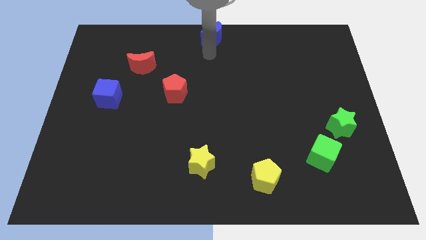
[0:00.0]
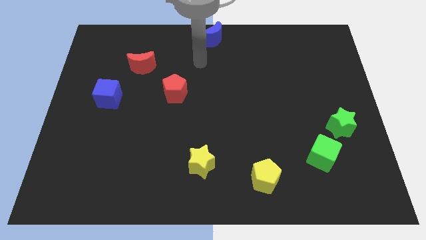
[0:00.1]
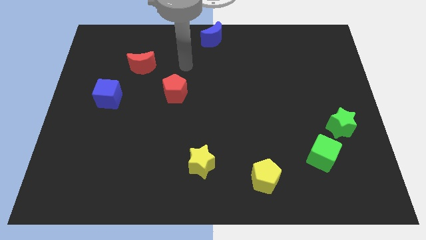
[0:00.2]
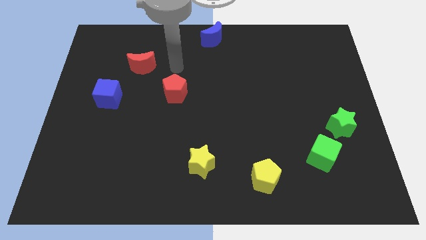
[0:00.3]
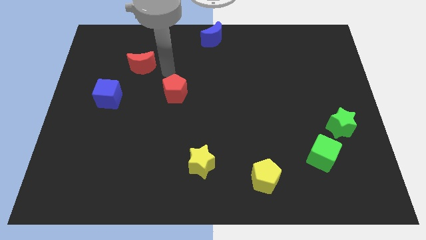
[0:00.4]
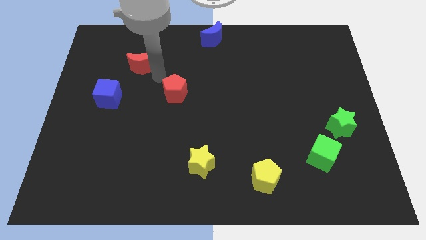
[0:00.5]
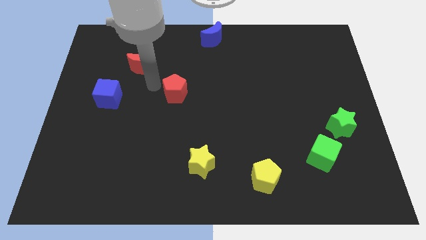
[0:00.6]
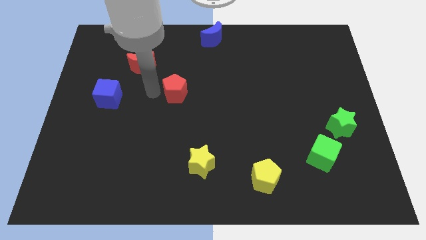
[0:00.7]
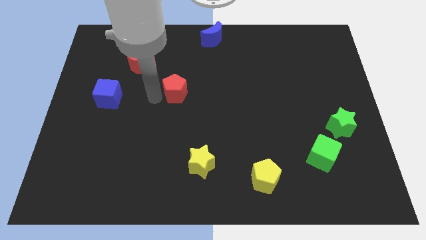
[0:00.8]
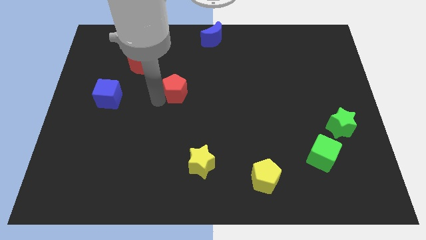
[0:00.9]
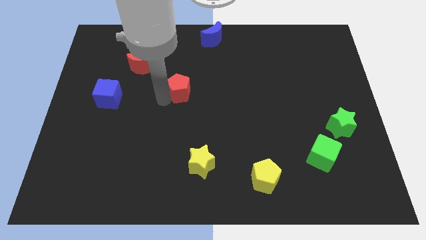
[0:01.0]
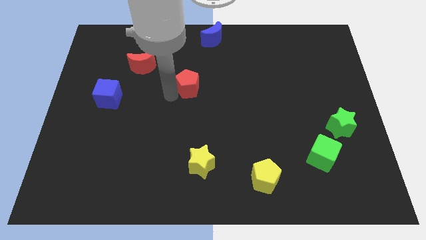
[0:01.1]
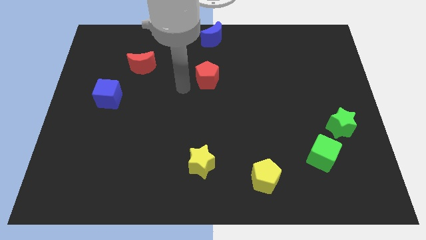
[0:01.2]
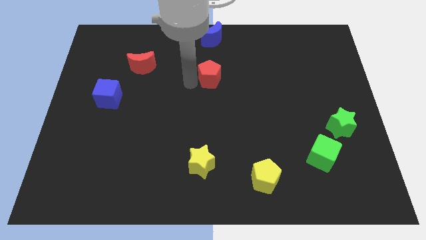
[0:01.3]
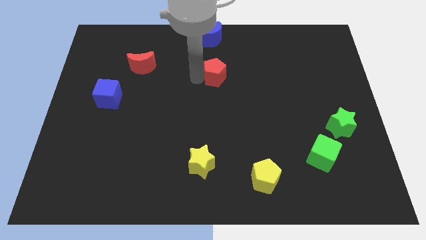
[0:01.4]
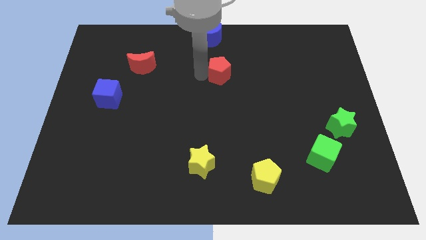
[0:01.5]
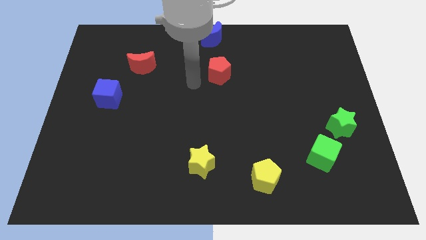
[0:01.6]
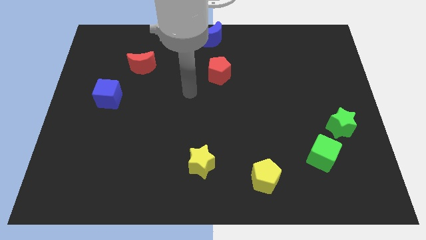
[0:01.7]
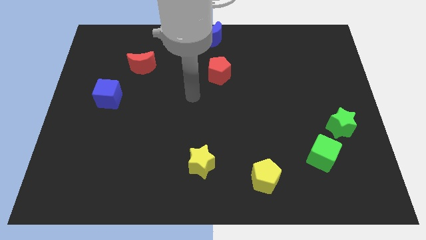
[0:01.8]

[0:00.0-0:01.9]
place the red pentagon below the blue moon

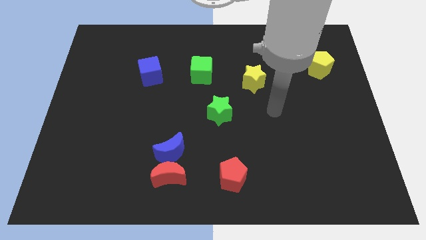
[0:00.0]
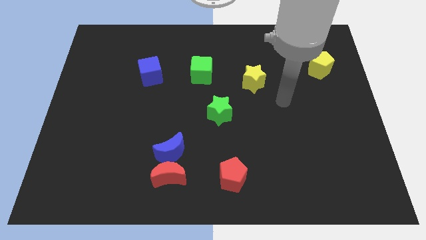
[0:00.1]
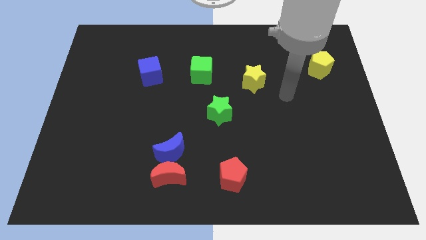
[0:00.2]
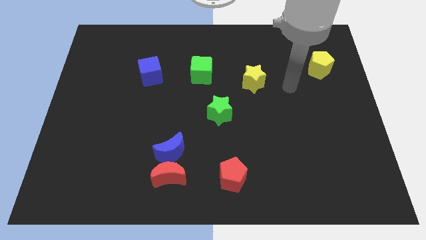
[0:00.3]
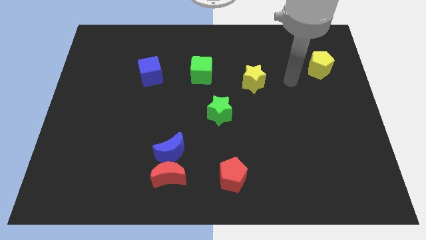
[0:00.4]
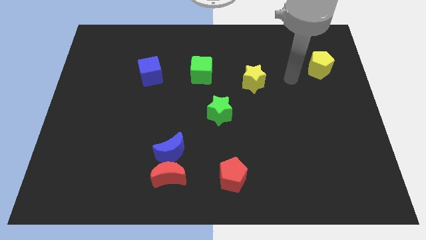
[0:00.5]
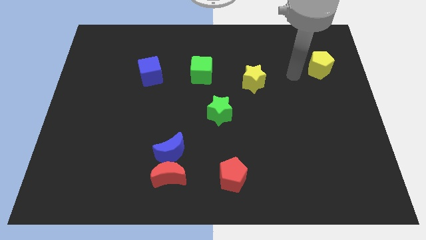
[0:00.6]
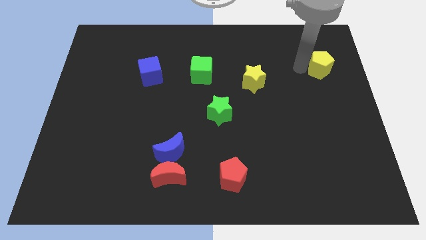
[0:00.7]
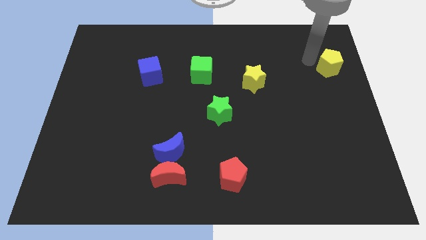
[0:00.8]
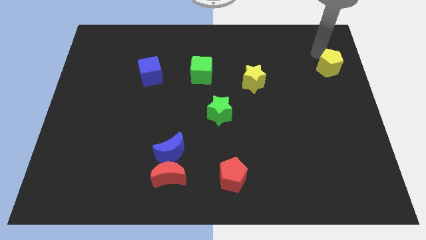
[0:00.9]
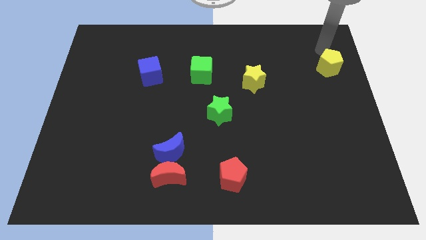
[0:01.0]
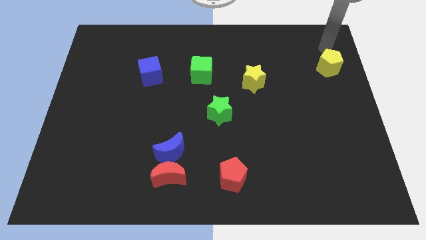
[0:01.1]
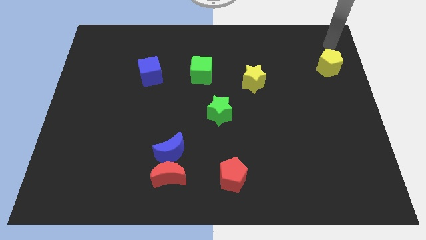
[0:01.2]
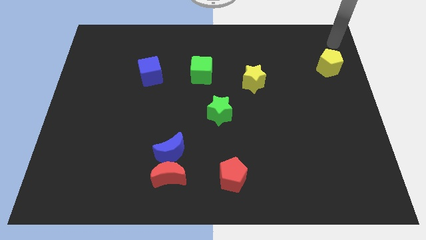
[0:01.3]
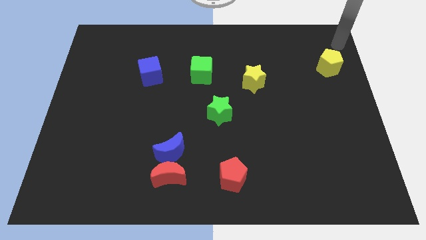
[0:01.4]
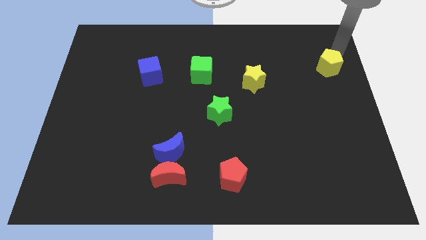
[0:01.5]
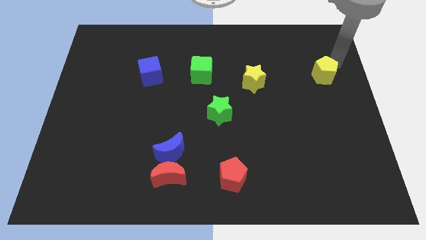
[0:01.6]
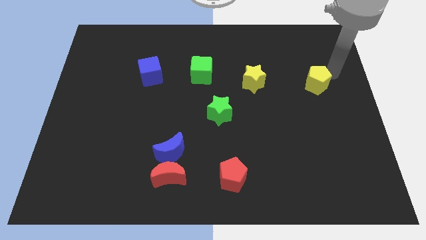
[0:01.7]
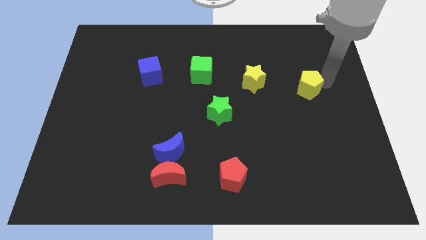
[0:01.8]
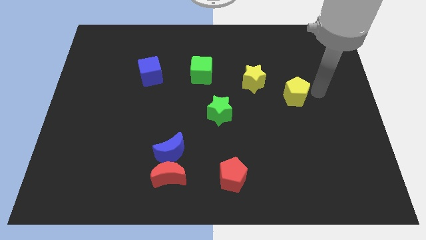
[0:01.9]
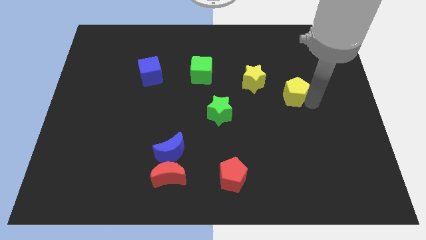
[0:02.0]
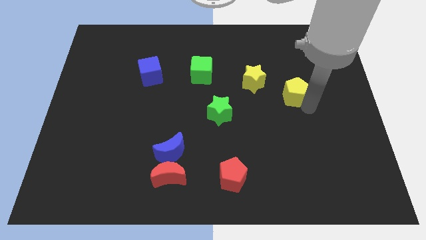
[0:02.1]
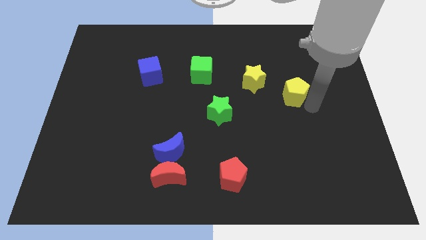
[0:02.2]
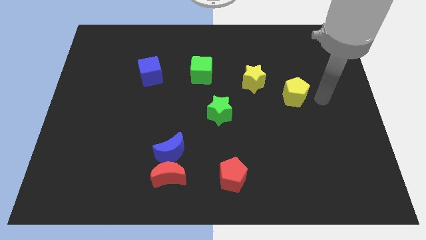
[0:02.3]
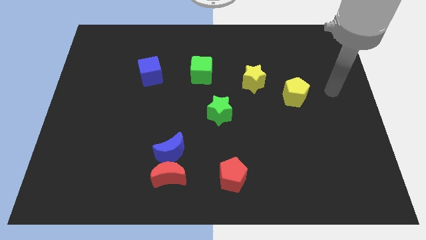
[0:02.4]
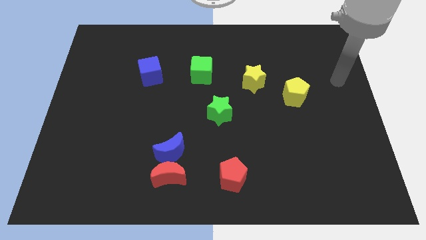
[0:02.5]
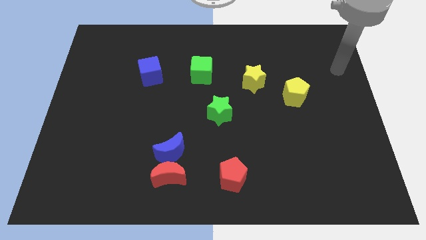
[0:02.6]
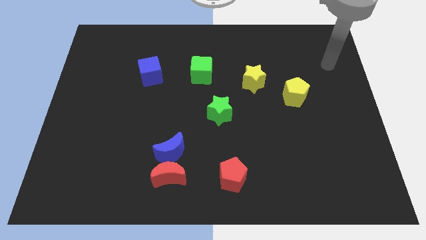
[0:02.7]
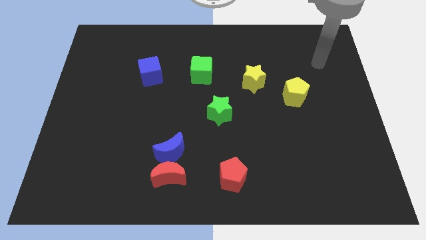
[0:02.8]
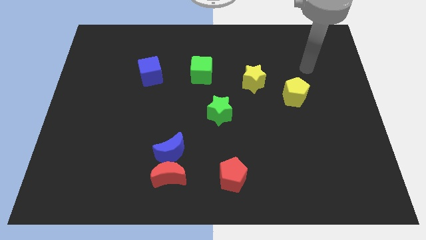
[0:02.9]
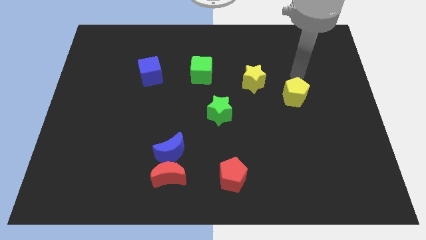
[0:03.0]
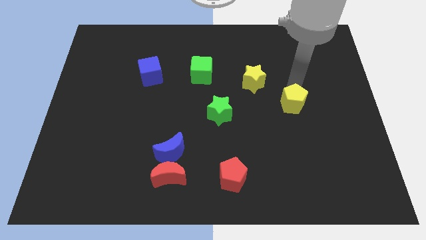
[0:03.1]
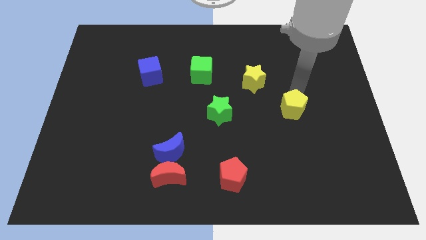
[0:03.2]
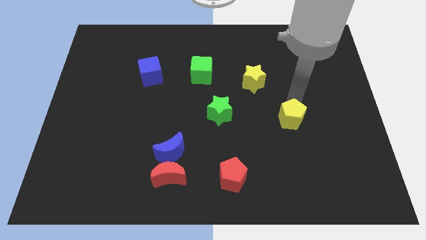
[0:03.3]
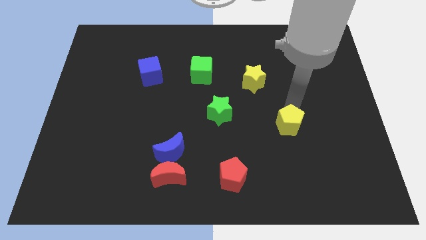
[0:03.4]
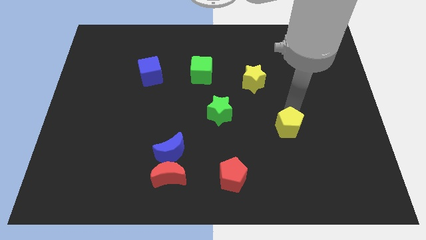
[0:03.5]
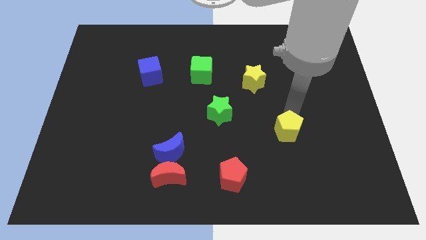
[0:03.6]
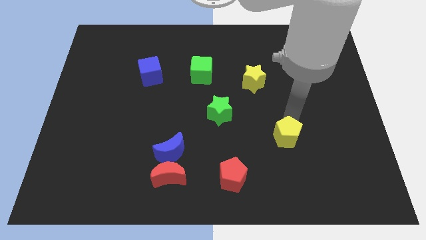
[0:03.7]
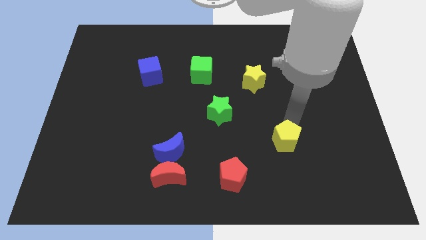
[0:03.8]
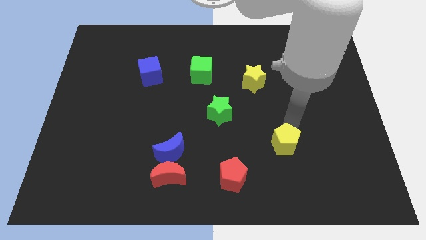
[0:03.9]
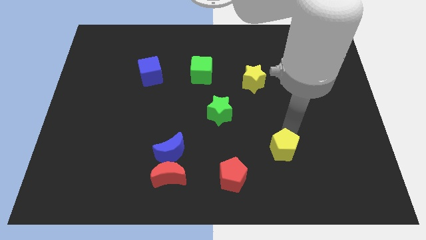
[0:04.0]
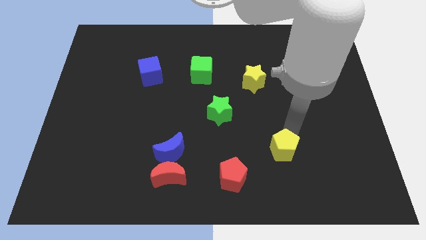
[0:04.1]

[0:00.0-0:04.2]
push yellow pentagon down parallel to blue moon

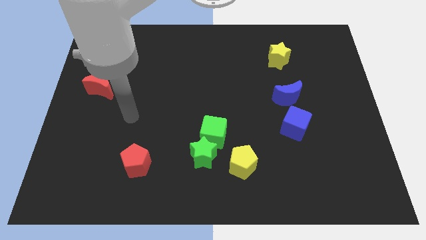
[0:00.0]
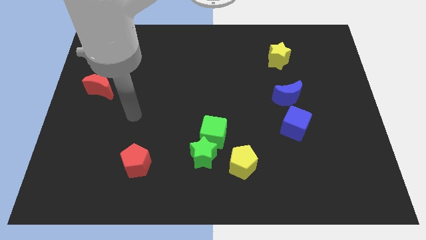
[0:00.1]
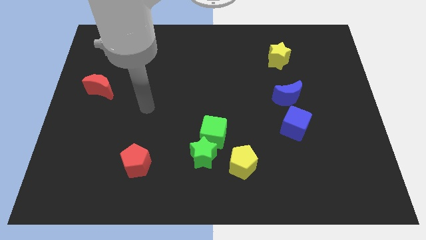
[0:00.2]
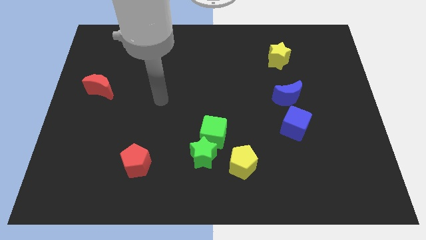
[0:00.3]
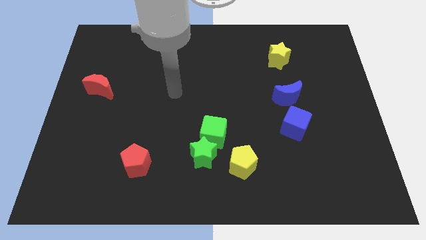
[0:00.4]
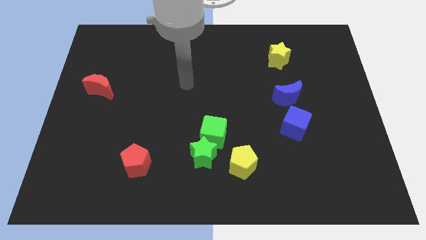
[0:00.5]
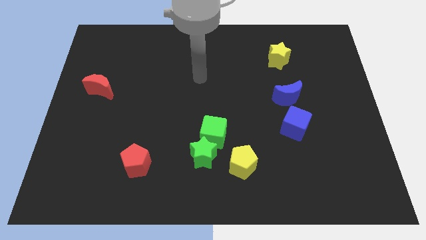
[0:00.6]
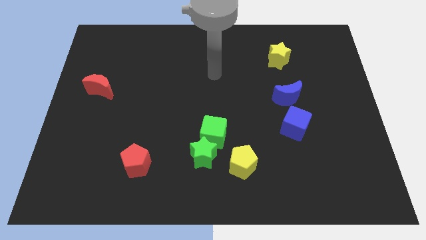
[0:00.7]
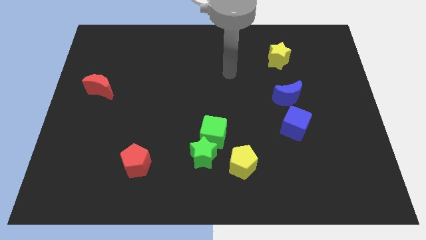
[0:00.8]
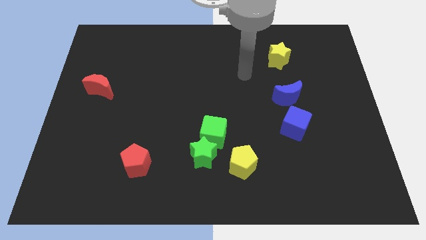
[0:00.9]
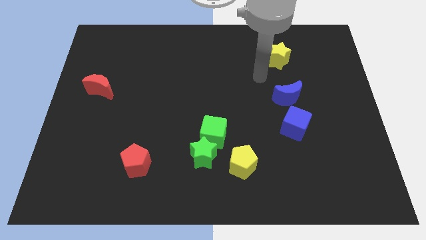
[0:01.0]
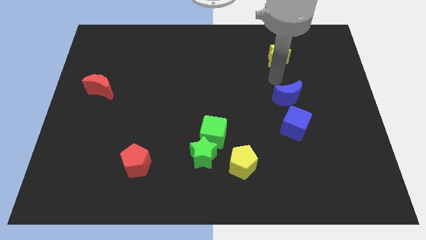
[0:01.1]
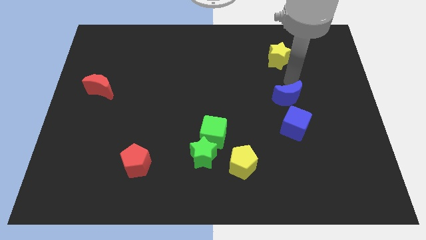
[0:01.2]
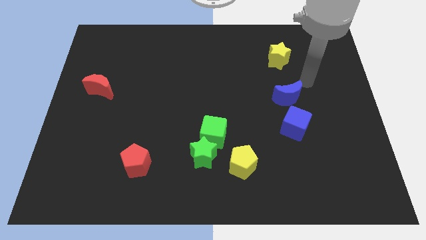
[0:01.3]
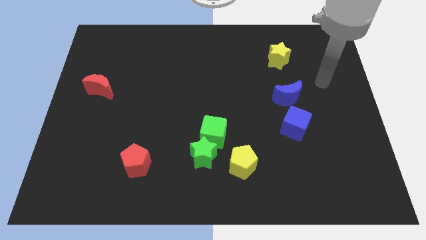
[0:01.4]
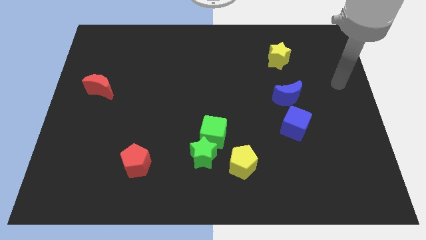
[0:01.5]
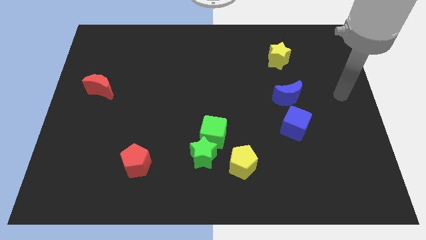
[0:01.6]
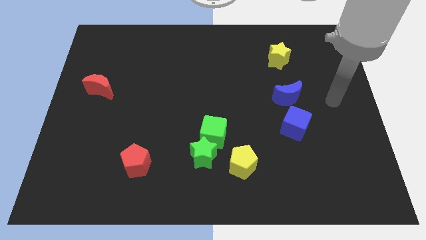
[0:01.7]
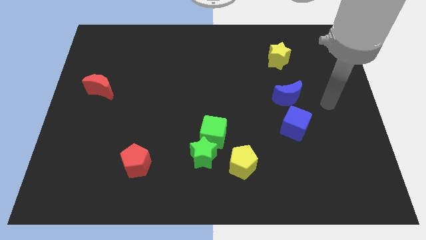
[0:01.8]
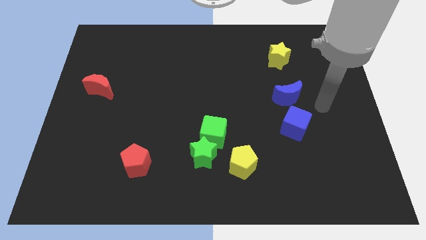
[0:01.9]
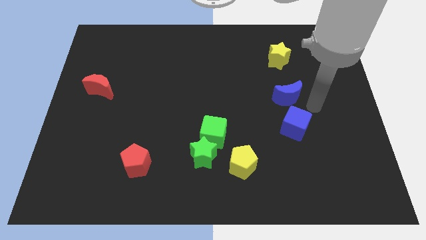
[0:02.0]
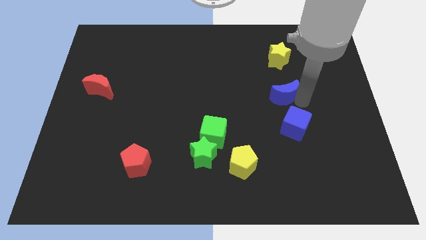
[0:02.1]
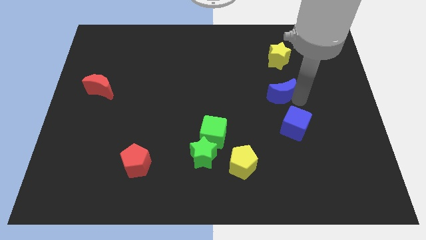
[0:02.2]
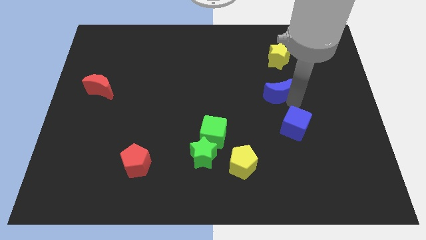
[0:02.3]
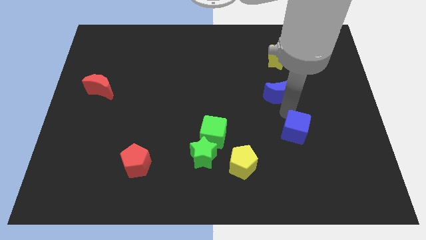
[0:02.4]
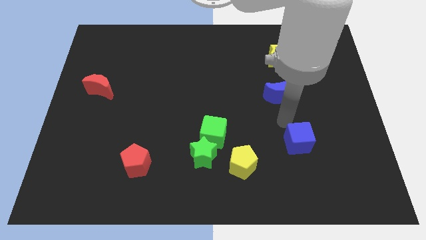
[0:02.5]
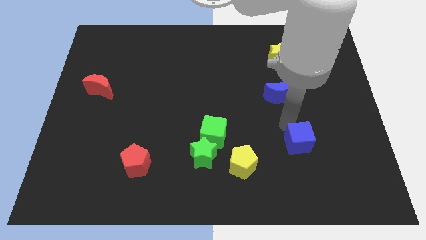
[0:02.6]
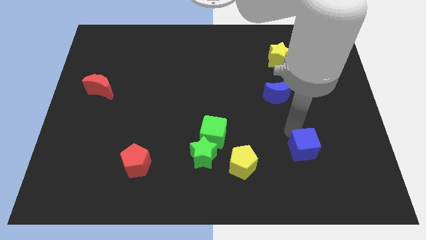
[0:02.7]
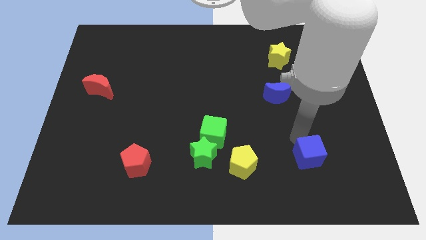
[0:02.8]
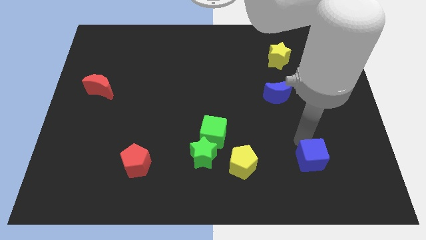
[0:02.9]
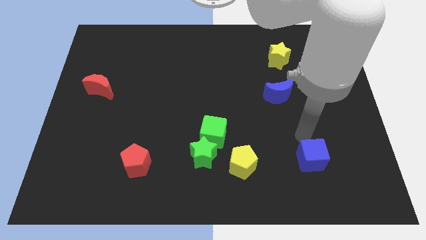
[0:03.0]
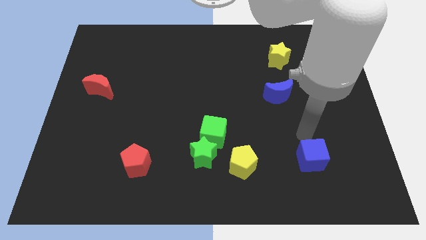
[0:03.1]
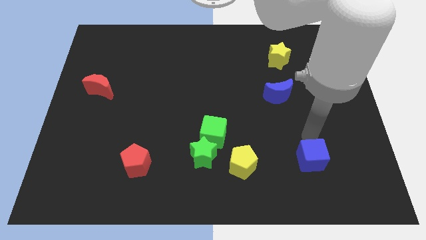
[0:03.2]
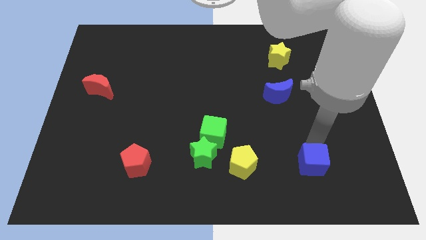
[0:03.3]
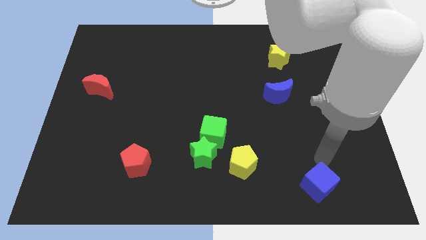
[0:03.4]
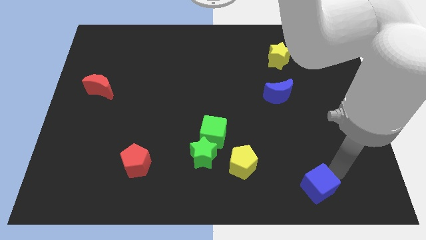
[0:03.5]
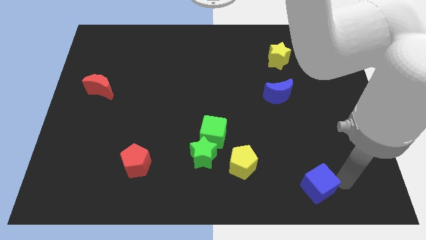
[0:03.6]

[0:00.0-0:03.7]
separate the blue cube from the blue crescent
